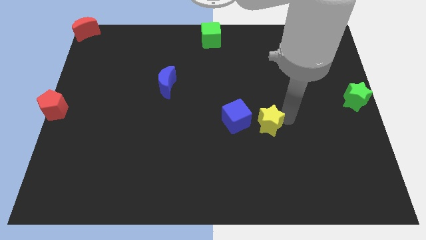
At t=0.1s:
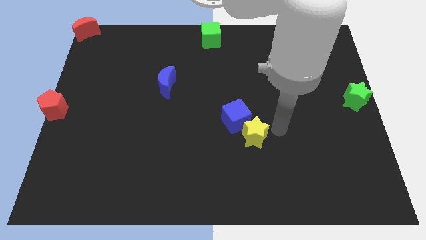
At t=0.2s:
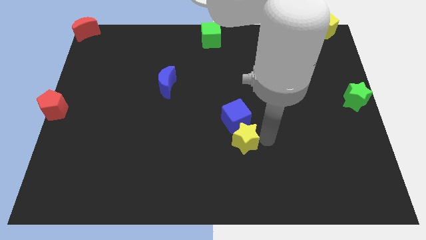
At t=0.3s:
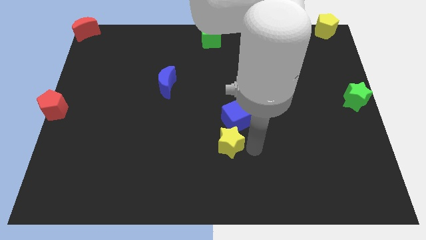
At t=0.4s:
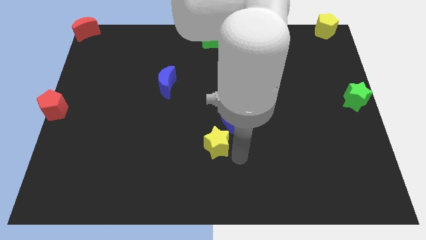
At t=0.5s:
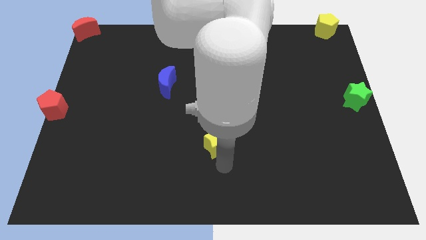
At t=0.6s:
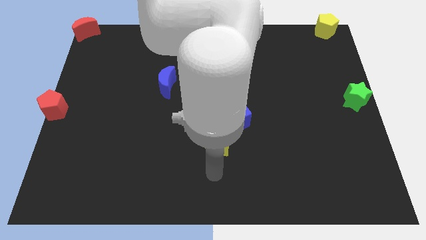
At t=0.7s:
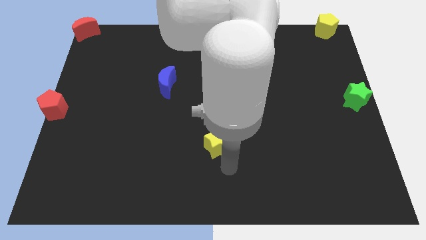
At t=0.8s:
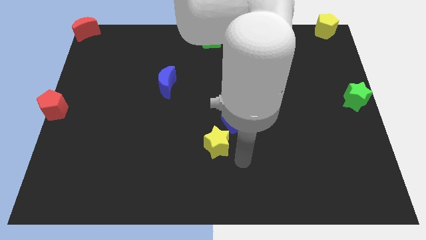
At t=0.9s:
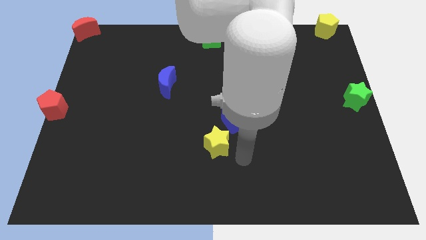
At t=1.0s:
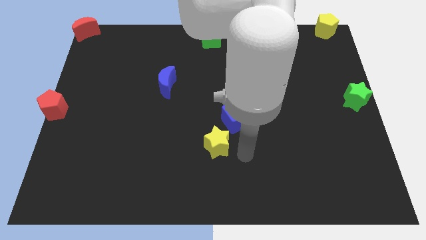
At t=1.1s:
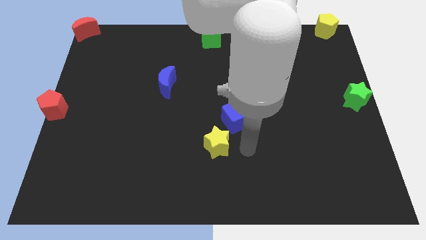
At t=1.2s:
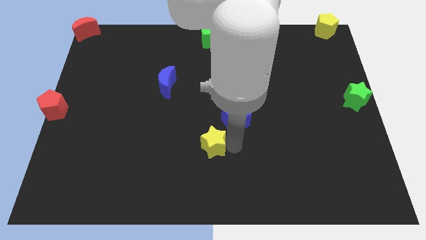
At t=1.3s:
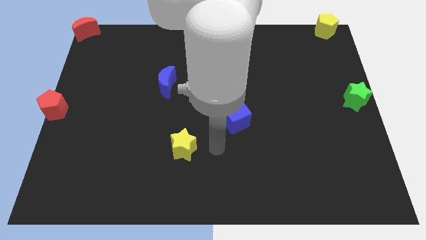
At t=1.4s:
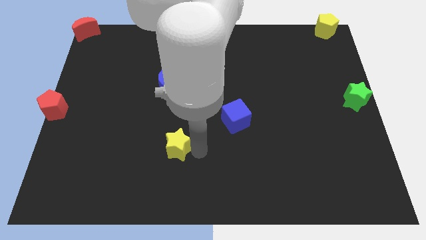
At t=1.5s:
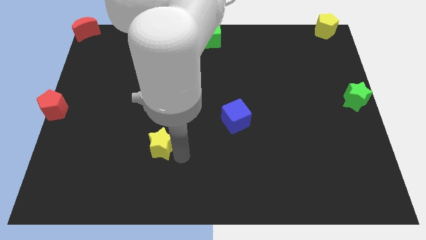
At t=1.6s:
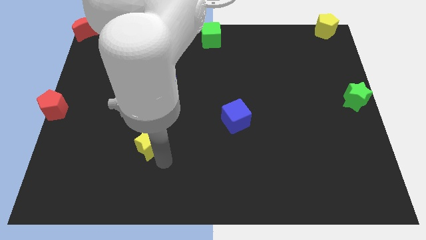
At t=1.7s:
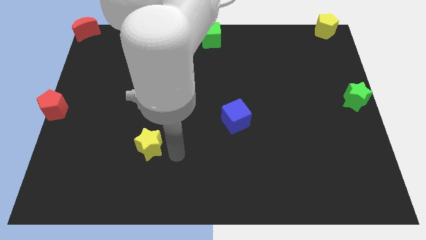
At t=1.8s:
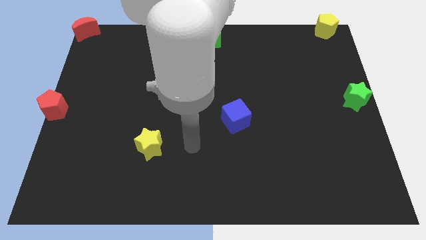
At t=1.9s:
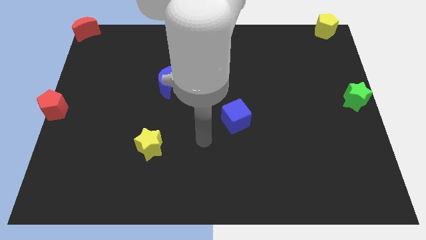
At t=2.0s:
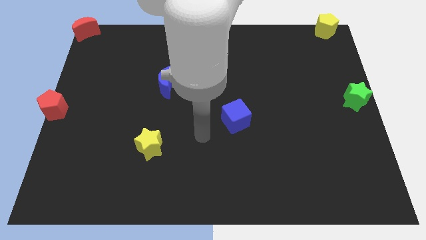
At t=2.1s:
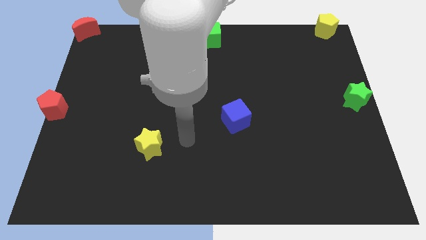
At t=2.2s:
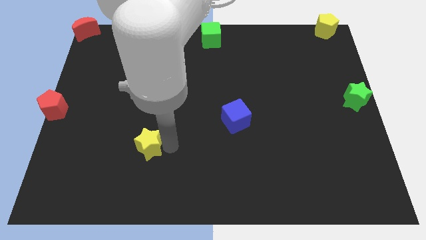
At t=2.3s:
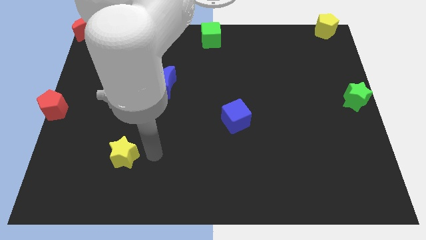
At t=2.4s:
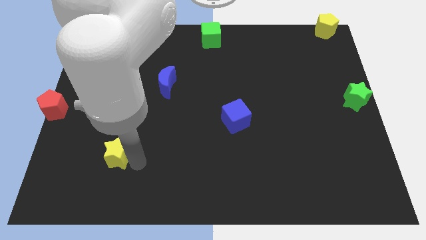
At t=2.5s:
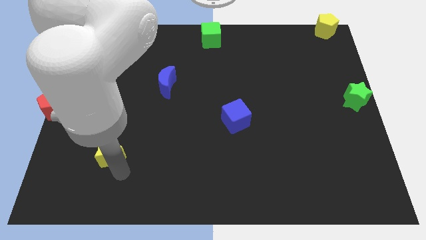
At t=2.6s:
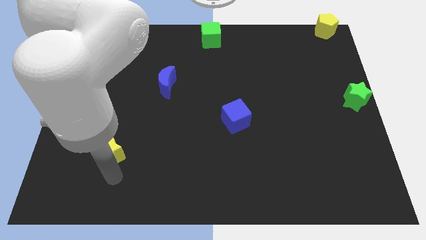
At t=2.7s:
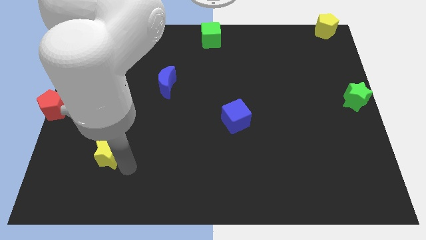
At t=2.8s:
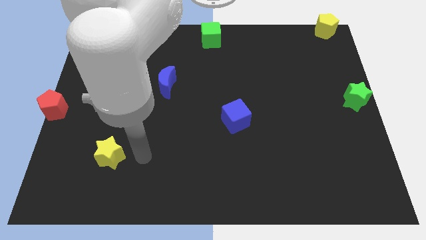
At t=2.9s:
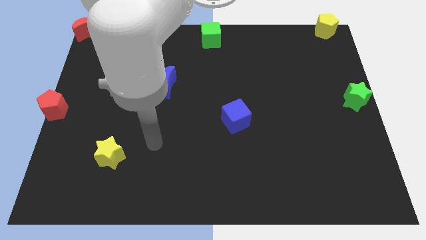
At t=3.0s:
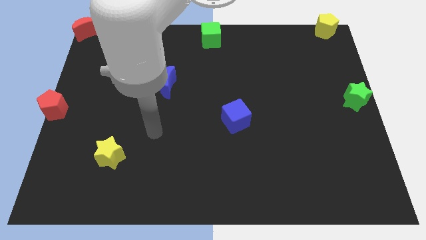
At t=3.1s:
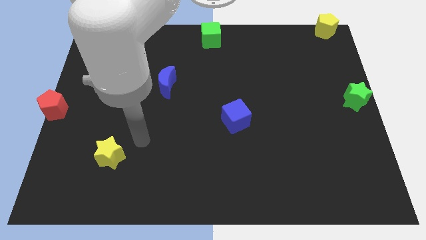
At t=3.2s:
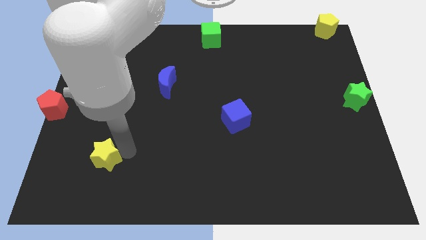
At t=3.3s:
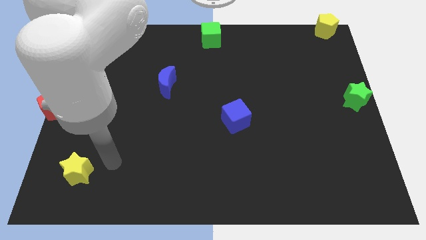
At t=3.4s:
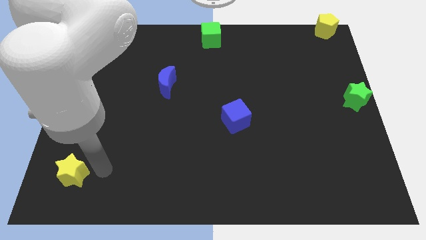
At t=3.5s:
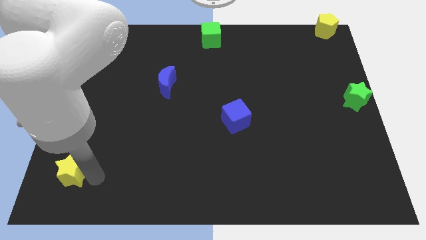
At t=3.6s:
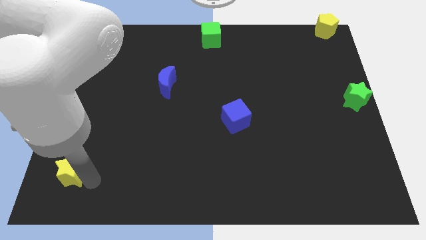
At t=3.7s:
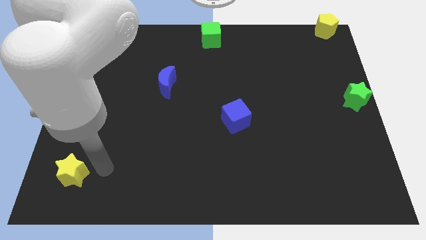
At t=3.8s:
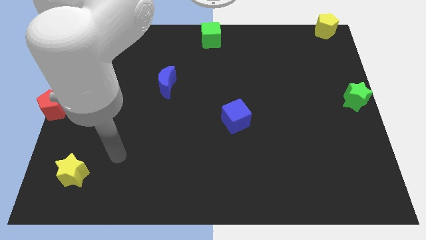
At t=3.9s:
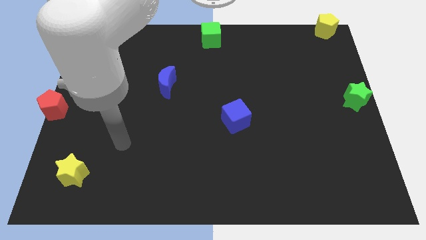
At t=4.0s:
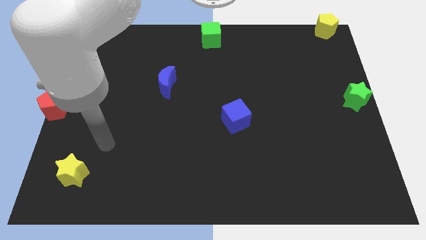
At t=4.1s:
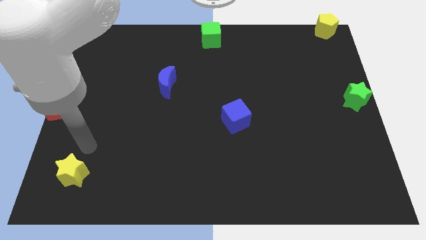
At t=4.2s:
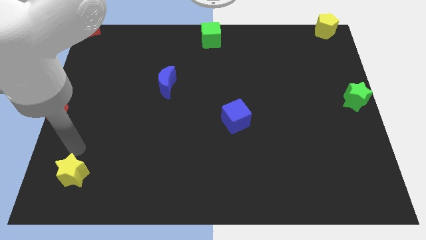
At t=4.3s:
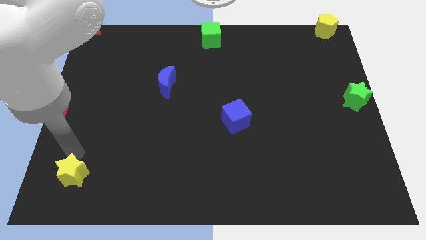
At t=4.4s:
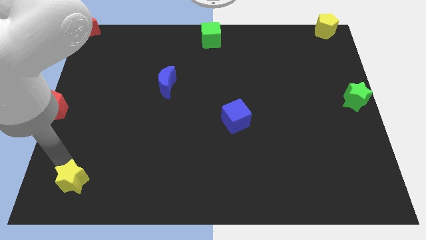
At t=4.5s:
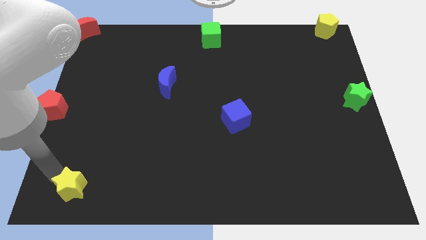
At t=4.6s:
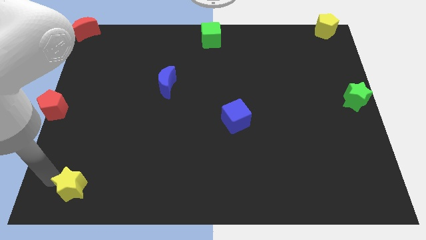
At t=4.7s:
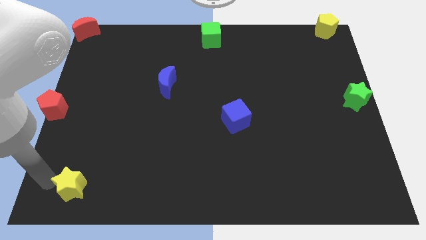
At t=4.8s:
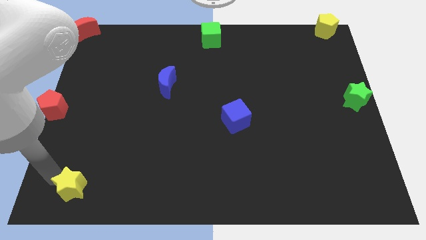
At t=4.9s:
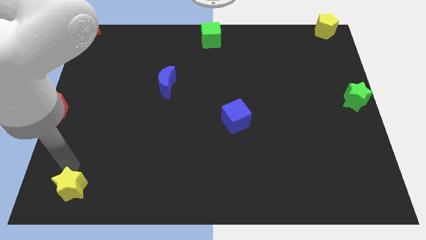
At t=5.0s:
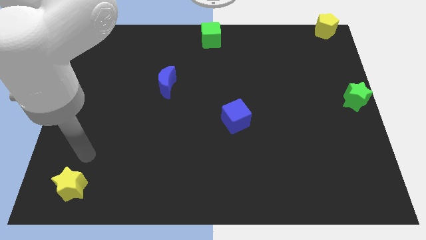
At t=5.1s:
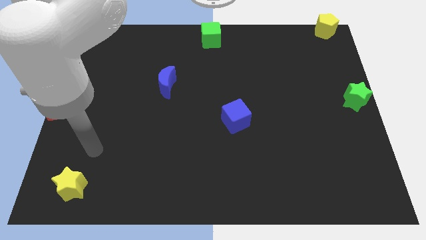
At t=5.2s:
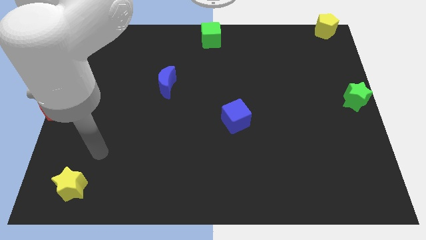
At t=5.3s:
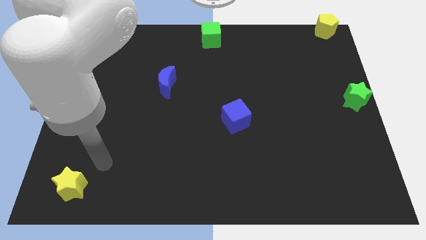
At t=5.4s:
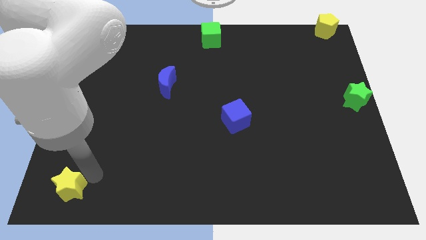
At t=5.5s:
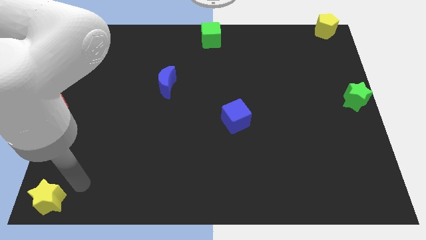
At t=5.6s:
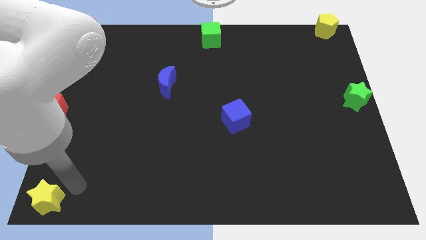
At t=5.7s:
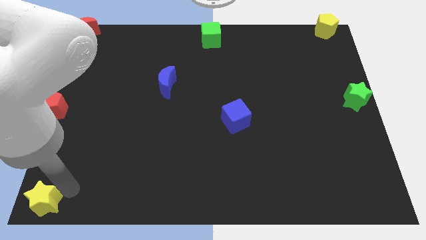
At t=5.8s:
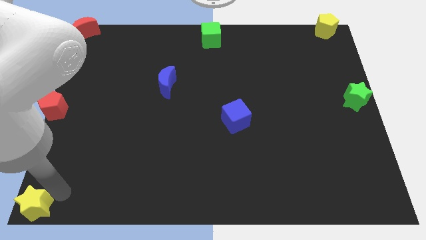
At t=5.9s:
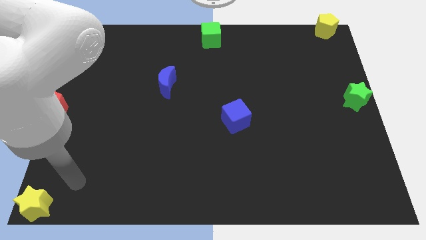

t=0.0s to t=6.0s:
move the yellow star to the bottom left of the board

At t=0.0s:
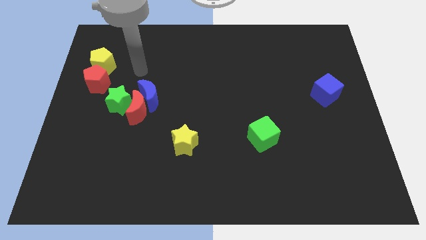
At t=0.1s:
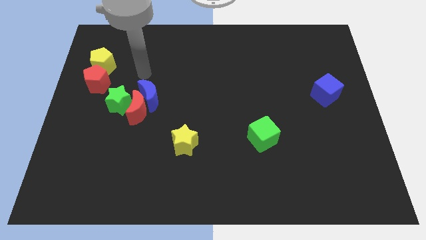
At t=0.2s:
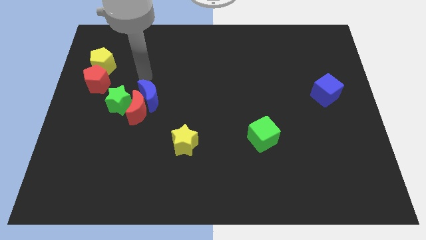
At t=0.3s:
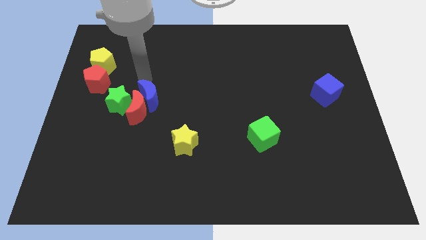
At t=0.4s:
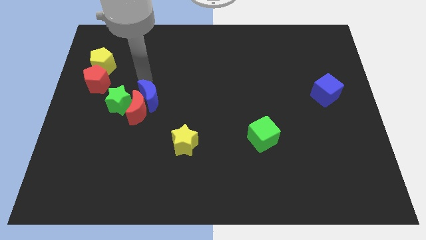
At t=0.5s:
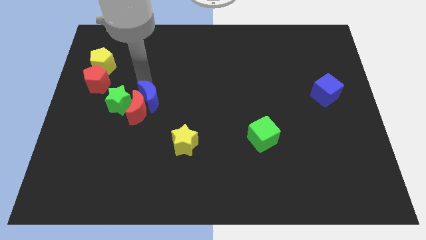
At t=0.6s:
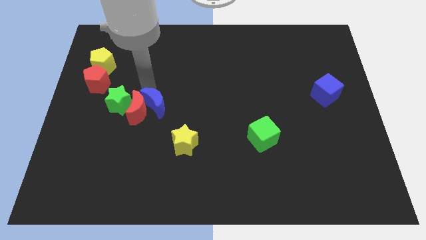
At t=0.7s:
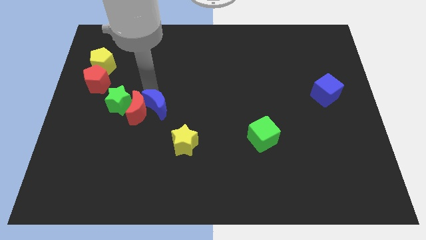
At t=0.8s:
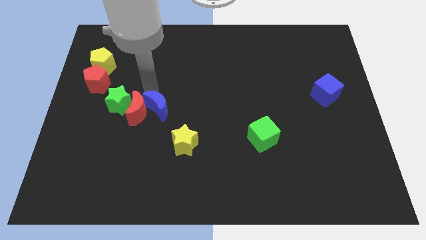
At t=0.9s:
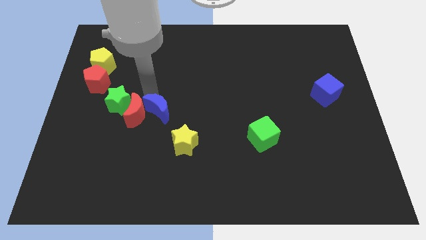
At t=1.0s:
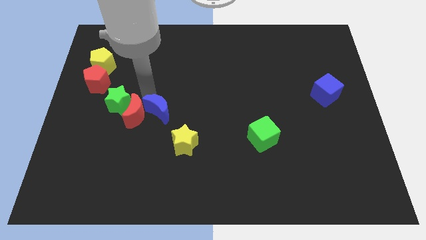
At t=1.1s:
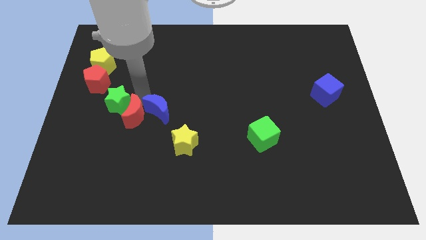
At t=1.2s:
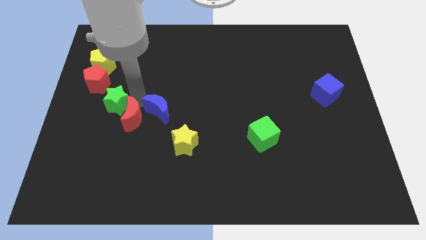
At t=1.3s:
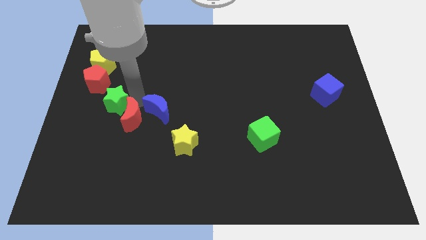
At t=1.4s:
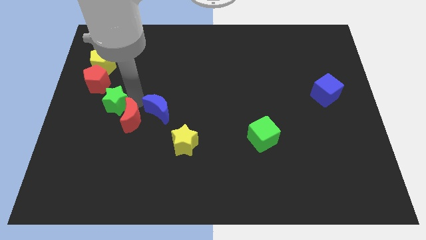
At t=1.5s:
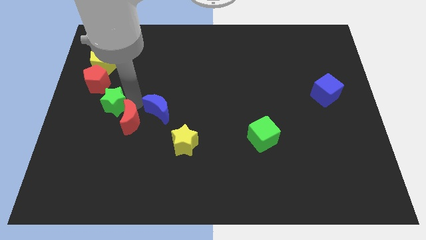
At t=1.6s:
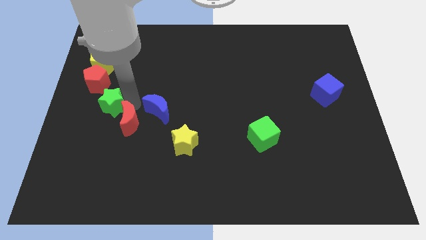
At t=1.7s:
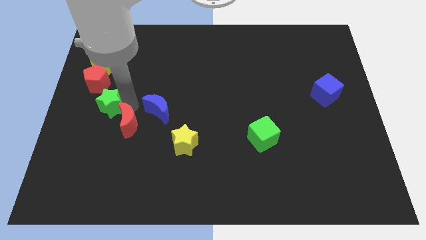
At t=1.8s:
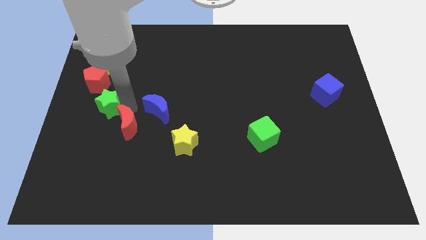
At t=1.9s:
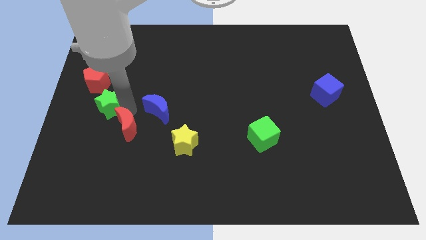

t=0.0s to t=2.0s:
separate the red and blue moon

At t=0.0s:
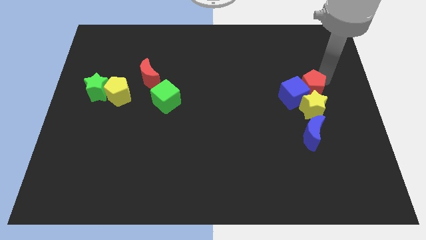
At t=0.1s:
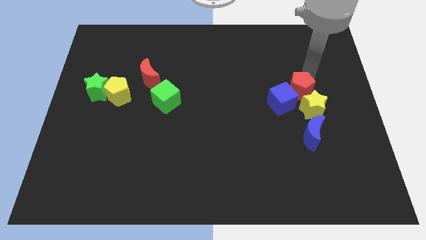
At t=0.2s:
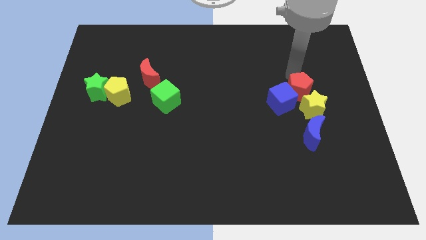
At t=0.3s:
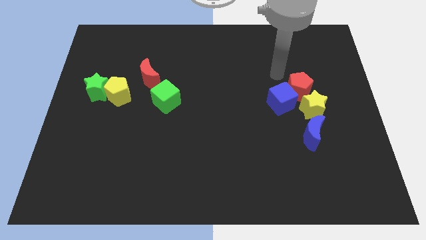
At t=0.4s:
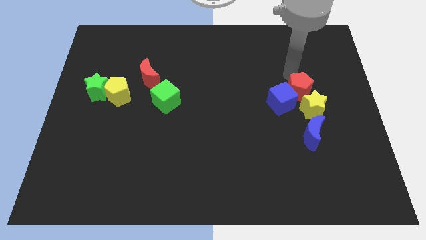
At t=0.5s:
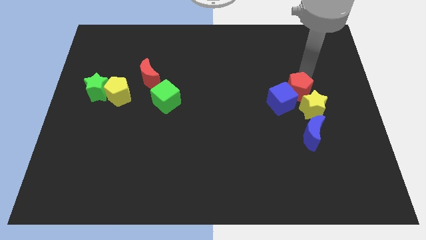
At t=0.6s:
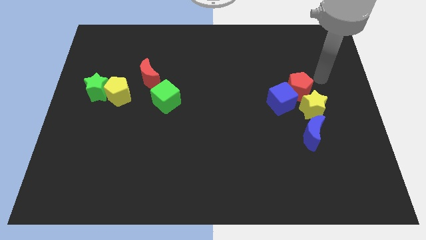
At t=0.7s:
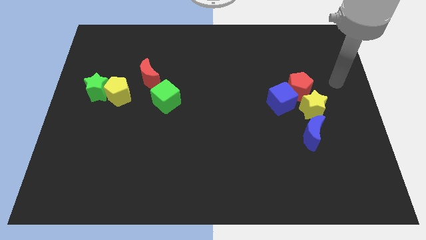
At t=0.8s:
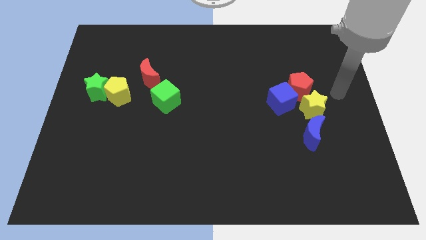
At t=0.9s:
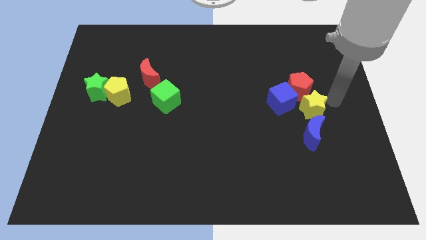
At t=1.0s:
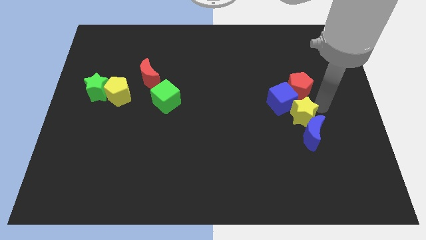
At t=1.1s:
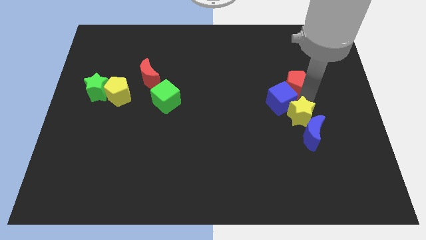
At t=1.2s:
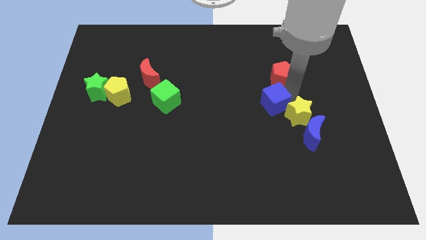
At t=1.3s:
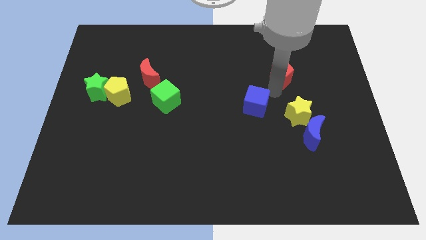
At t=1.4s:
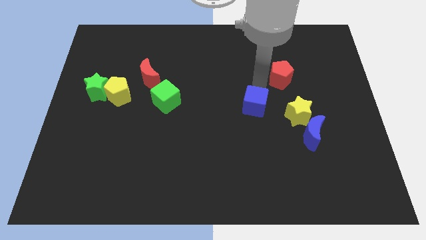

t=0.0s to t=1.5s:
move the blue cube away from the group of blocks
